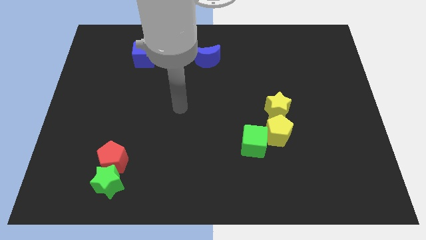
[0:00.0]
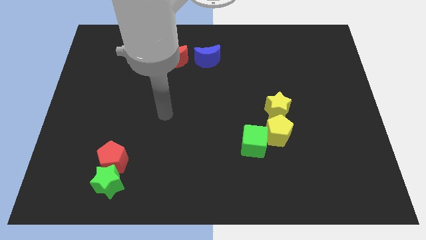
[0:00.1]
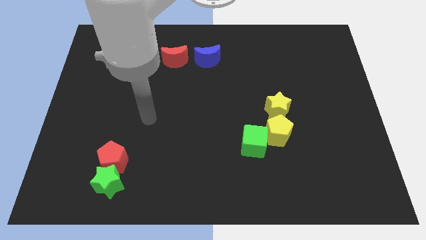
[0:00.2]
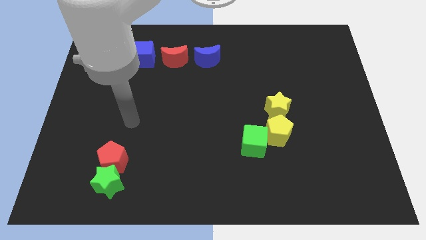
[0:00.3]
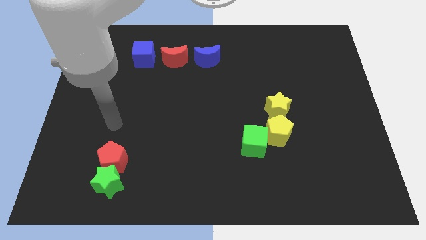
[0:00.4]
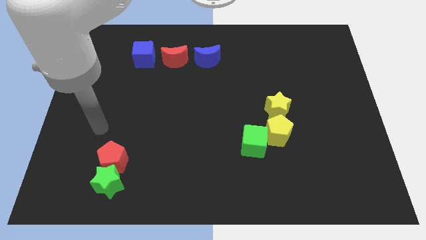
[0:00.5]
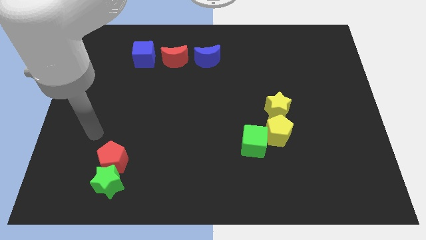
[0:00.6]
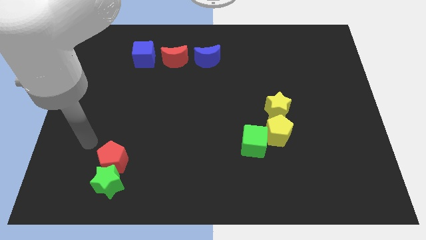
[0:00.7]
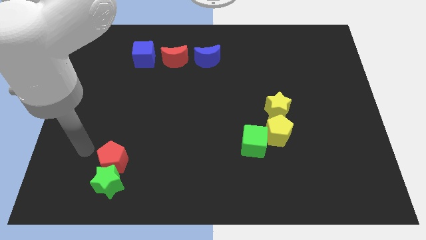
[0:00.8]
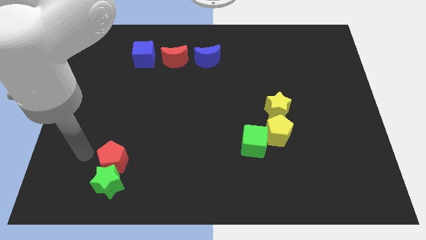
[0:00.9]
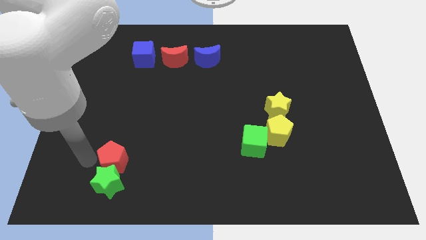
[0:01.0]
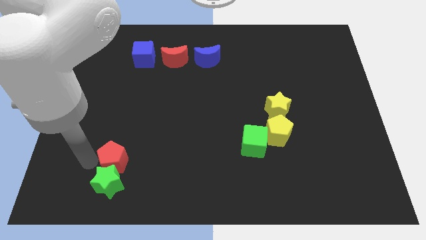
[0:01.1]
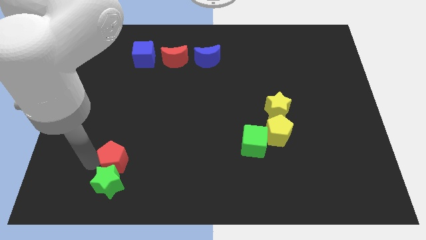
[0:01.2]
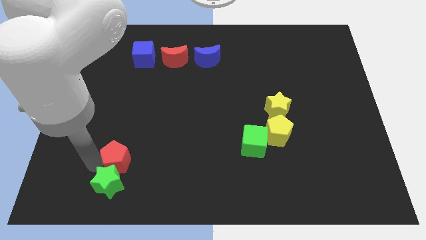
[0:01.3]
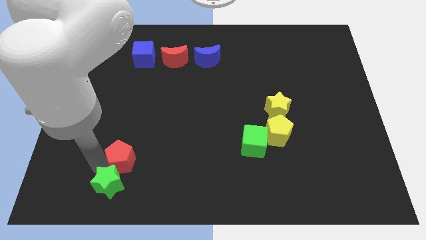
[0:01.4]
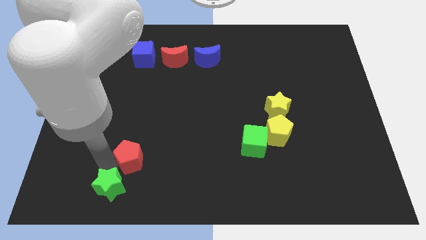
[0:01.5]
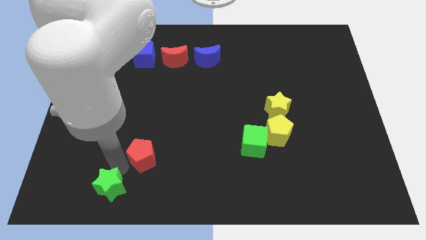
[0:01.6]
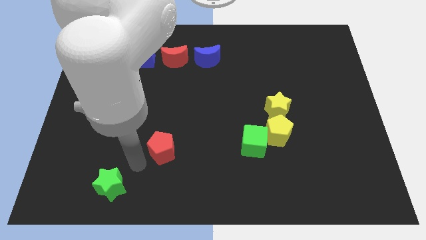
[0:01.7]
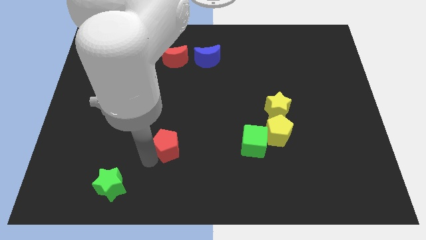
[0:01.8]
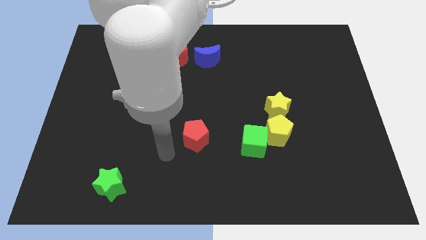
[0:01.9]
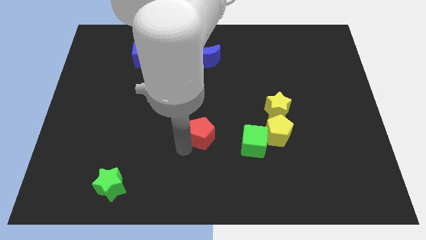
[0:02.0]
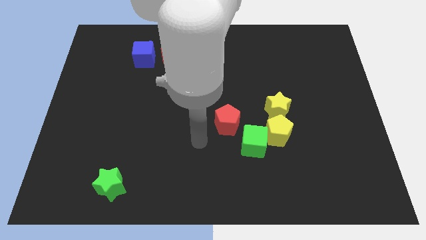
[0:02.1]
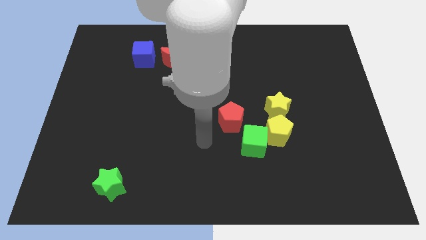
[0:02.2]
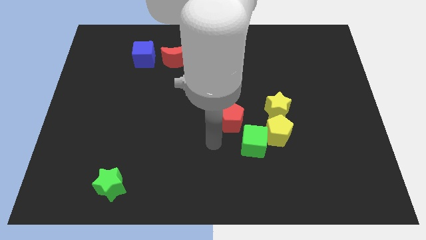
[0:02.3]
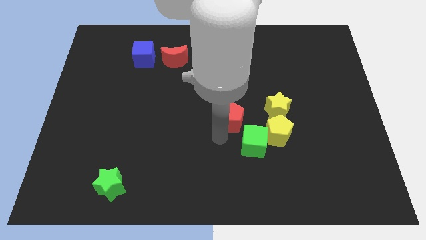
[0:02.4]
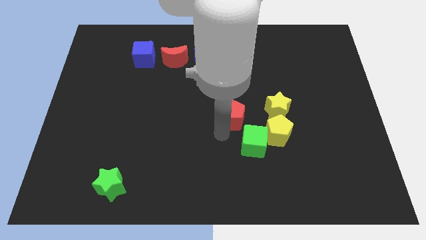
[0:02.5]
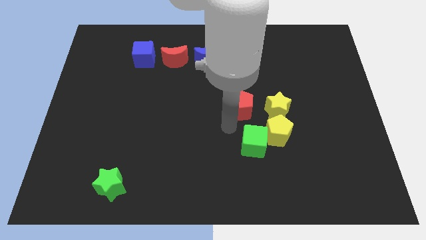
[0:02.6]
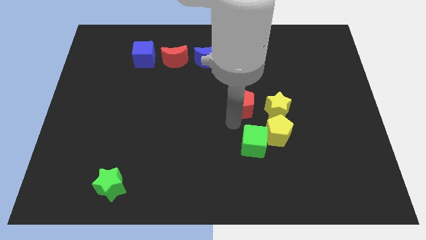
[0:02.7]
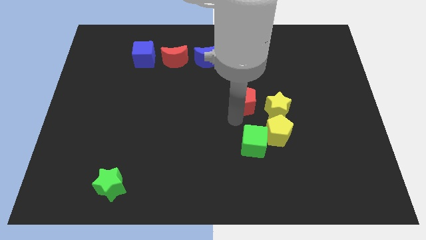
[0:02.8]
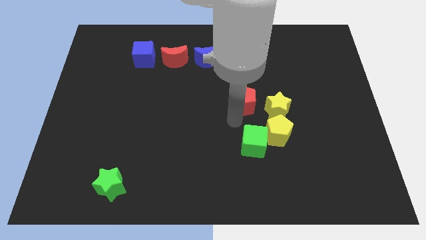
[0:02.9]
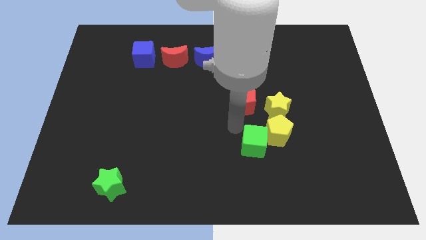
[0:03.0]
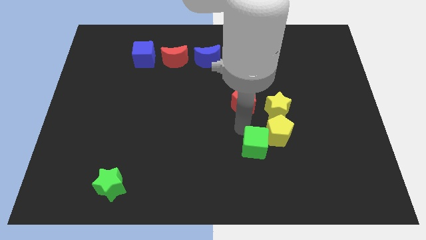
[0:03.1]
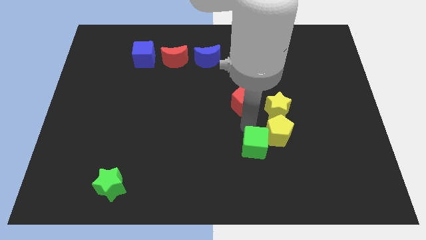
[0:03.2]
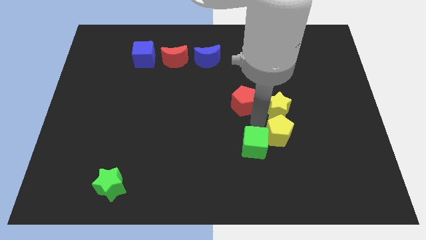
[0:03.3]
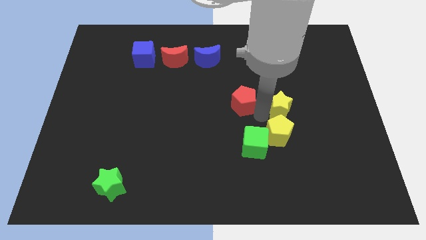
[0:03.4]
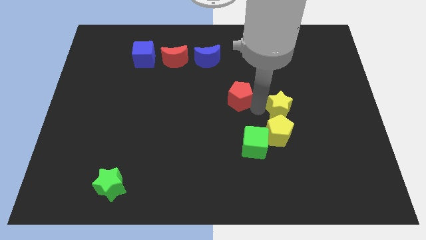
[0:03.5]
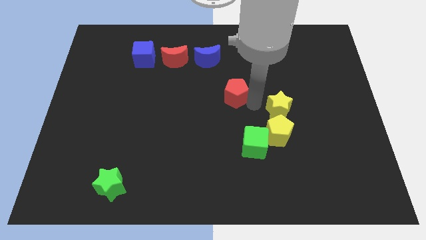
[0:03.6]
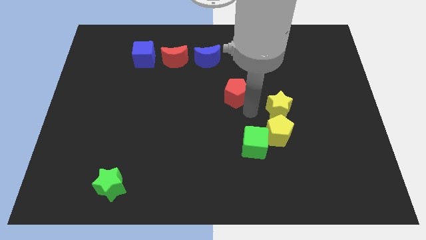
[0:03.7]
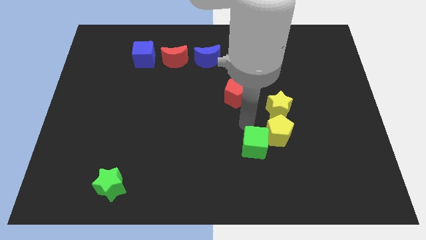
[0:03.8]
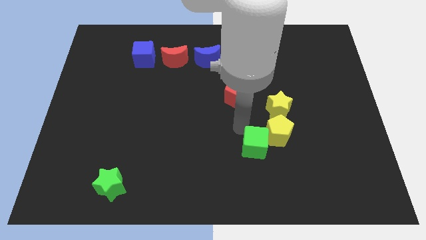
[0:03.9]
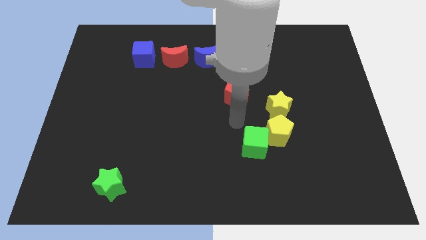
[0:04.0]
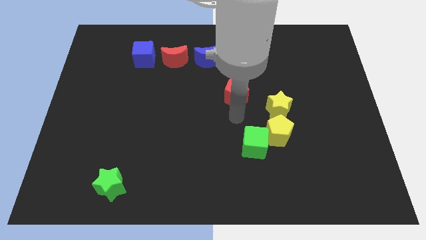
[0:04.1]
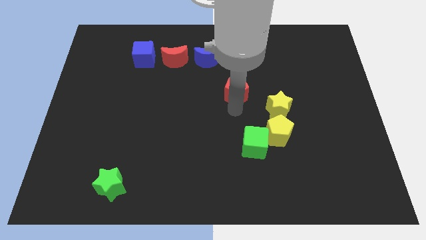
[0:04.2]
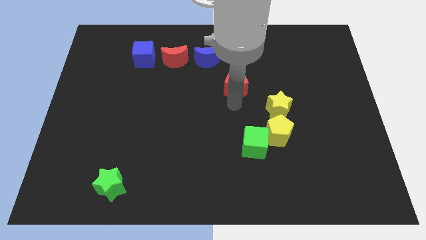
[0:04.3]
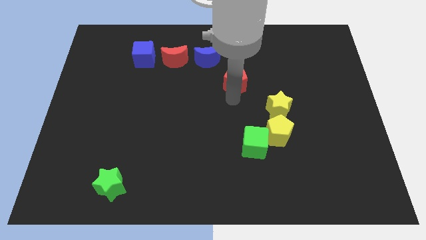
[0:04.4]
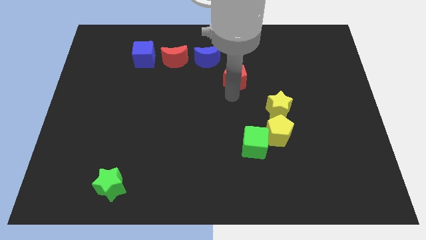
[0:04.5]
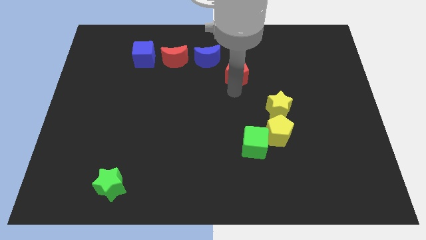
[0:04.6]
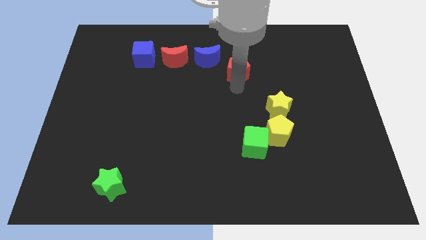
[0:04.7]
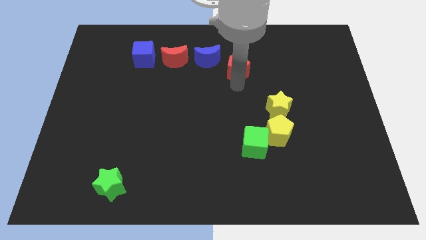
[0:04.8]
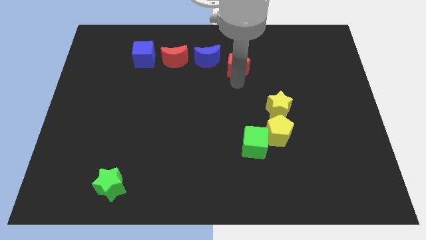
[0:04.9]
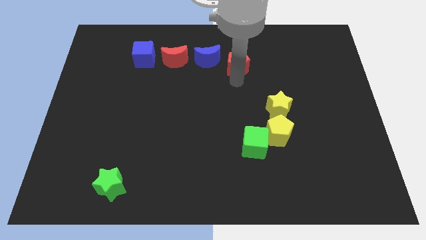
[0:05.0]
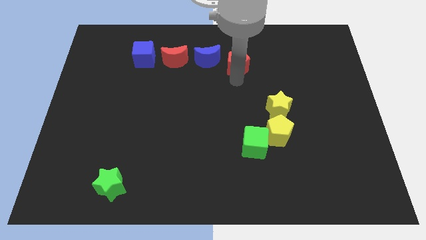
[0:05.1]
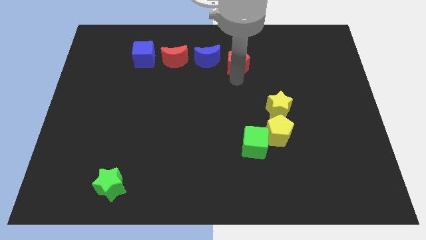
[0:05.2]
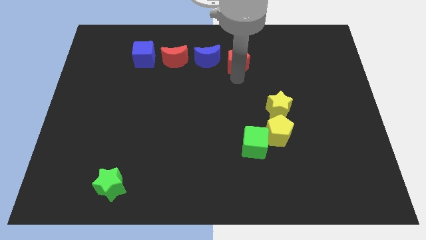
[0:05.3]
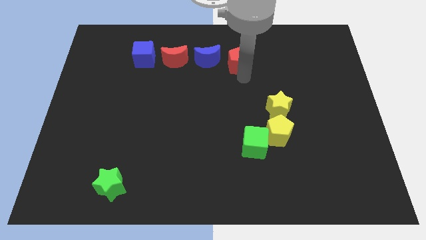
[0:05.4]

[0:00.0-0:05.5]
push the red pentagon to the right of the blue crescent

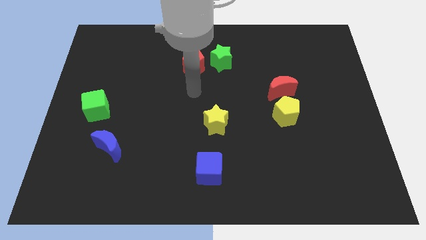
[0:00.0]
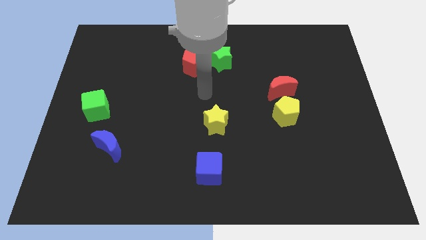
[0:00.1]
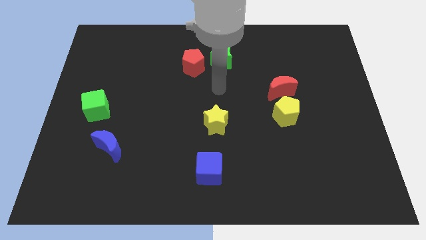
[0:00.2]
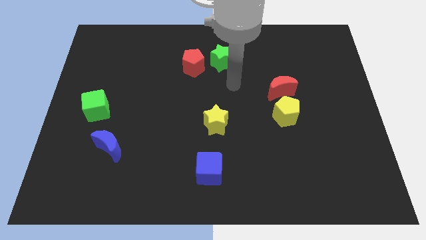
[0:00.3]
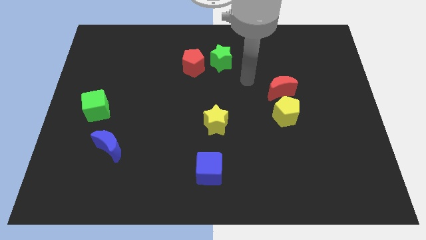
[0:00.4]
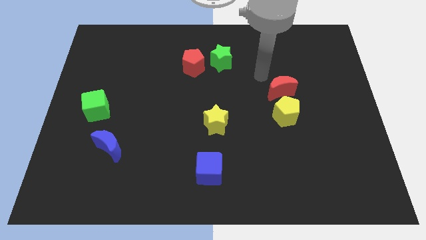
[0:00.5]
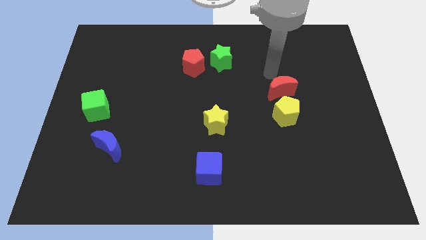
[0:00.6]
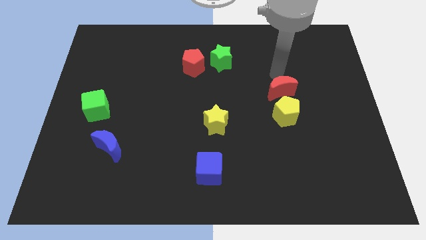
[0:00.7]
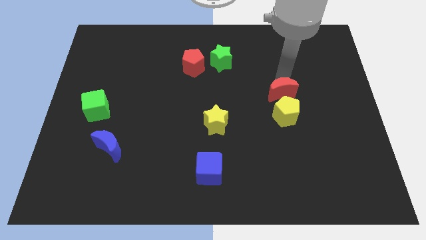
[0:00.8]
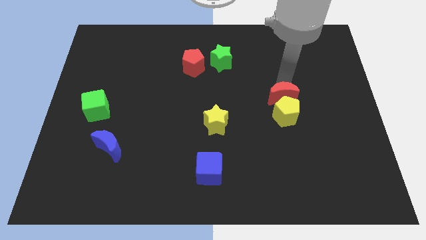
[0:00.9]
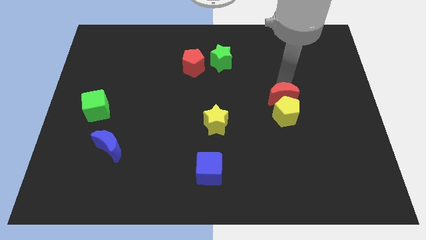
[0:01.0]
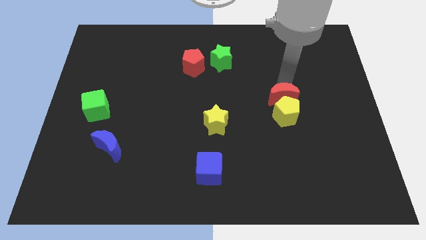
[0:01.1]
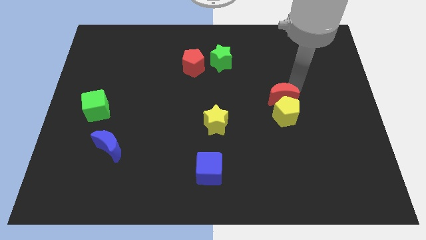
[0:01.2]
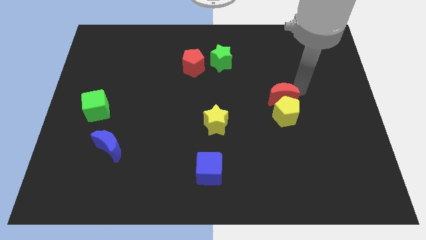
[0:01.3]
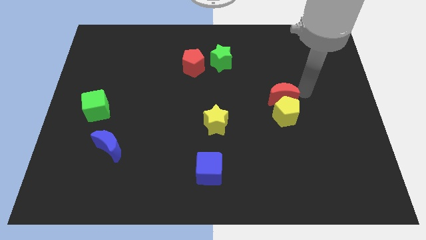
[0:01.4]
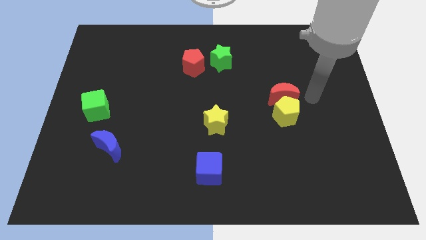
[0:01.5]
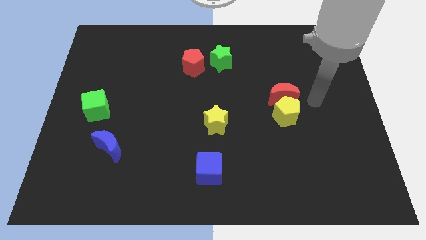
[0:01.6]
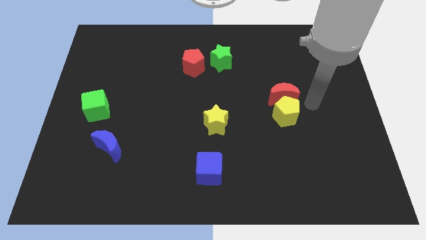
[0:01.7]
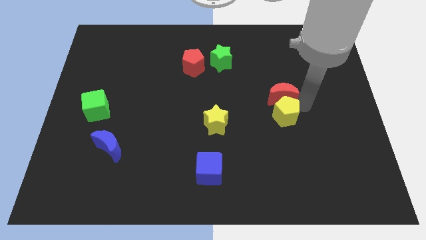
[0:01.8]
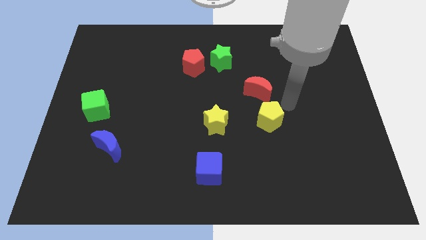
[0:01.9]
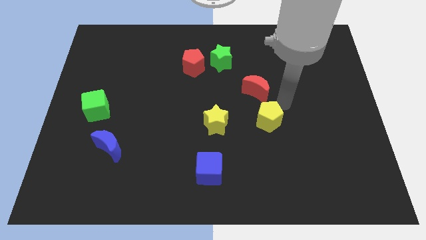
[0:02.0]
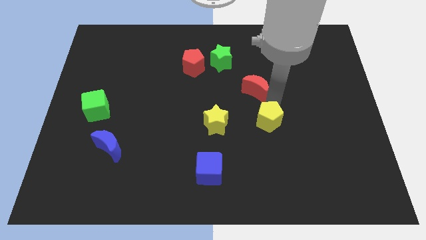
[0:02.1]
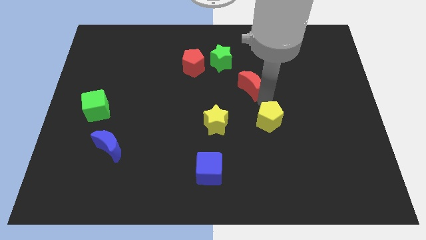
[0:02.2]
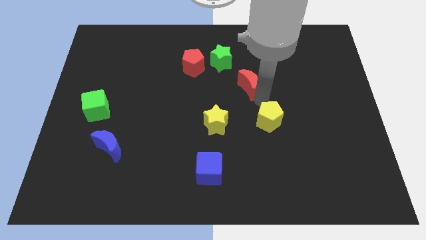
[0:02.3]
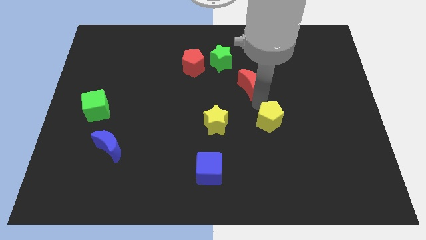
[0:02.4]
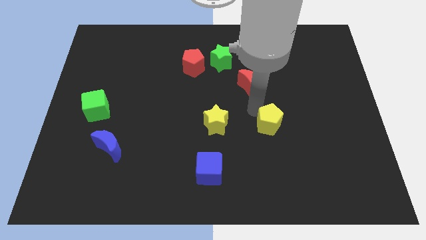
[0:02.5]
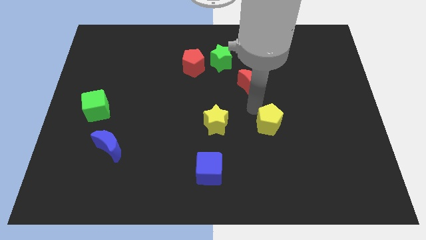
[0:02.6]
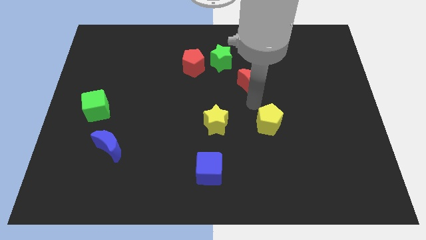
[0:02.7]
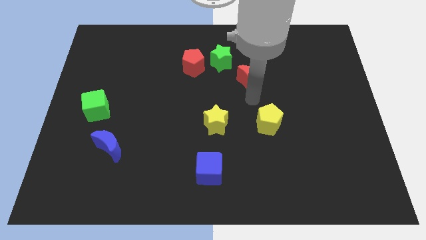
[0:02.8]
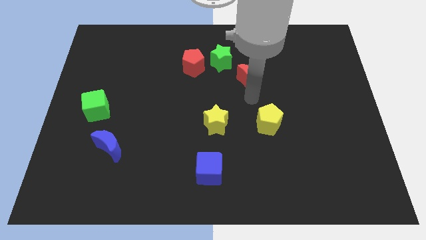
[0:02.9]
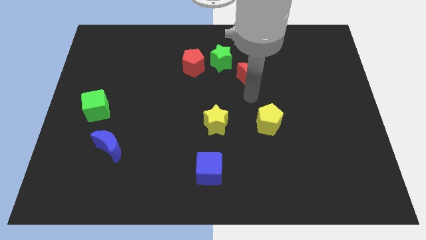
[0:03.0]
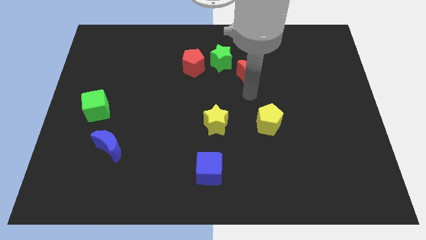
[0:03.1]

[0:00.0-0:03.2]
separate the red moon away from yellow pentagon

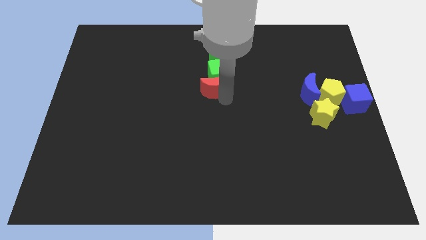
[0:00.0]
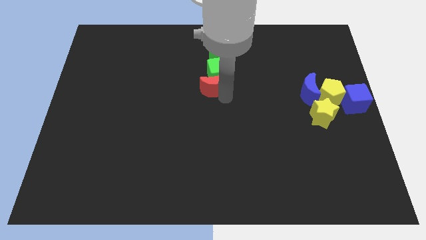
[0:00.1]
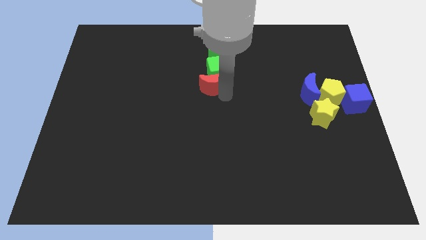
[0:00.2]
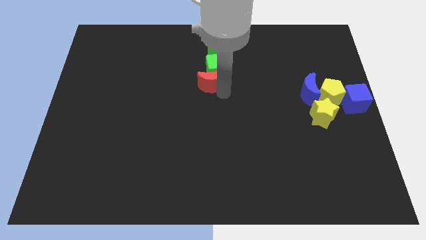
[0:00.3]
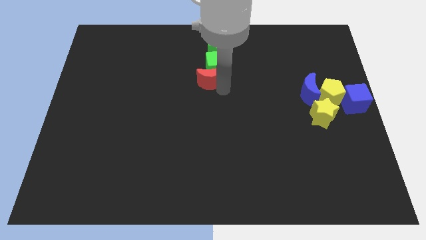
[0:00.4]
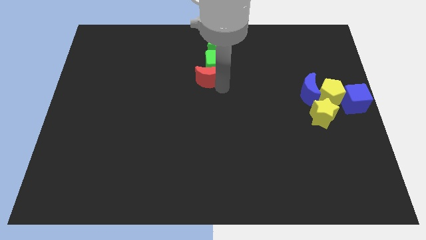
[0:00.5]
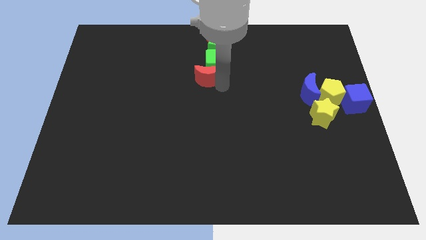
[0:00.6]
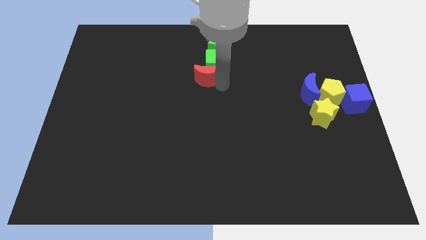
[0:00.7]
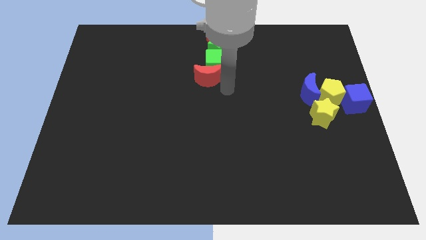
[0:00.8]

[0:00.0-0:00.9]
push red crescent and green cube into the group of blocks
